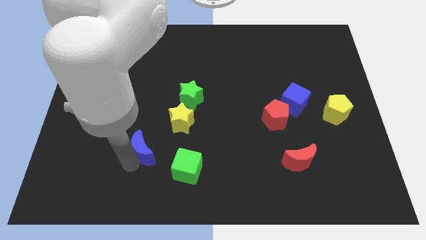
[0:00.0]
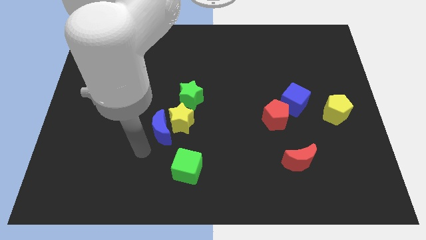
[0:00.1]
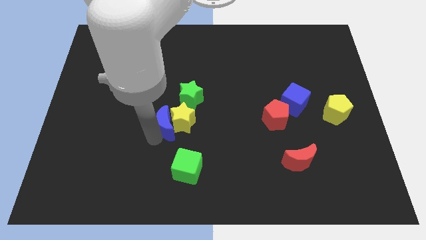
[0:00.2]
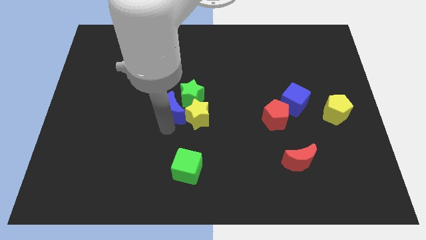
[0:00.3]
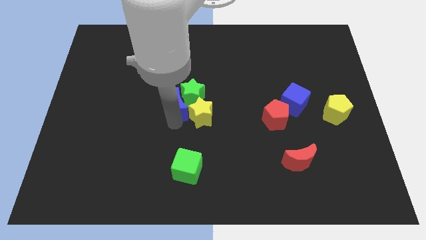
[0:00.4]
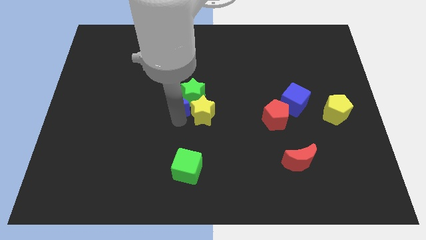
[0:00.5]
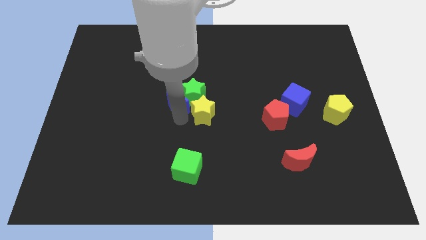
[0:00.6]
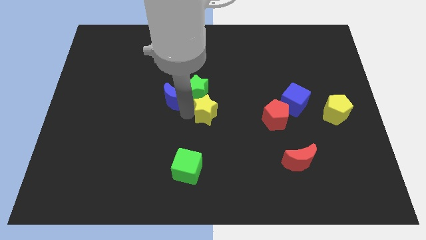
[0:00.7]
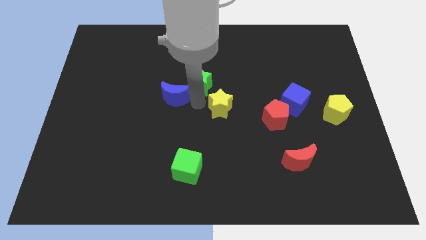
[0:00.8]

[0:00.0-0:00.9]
move the blue crescent to the left of the green star

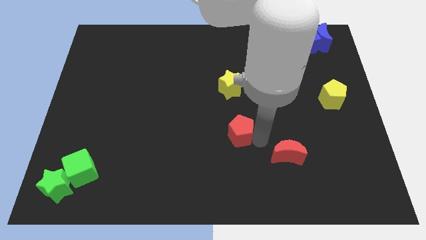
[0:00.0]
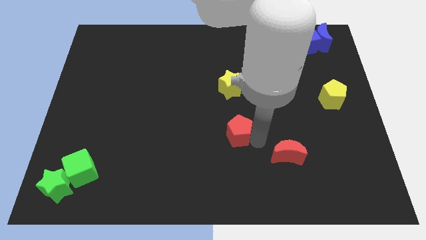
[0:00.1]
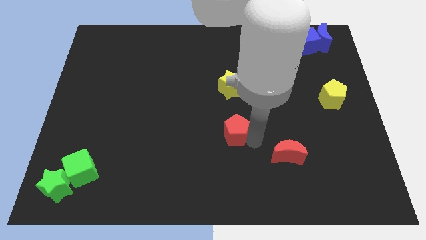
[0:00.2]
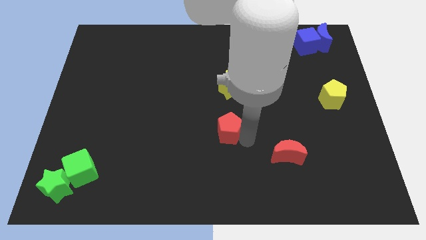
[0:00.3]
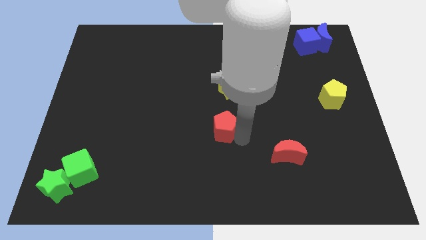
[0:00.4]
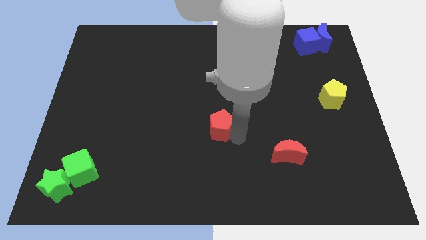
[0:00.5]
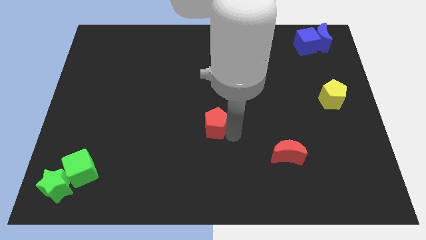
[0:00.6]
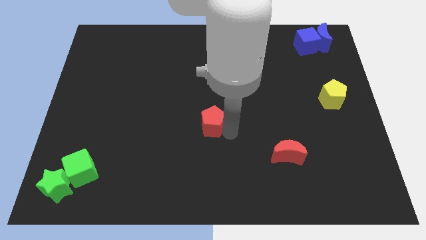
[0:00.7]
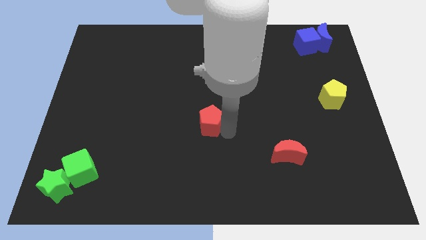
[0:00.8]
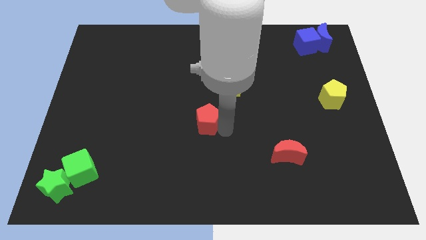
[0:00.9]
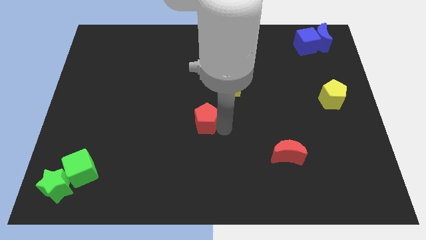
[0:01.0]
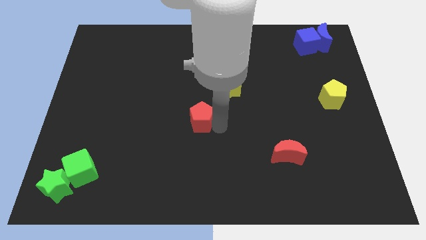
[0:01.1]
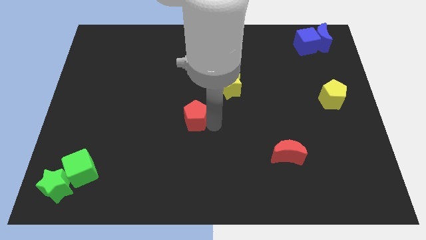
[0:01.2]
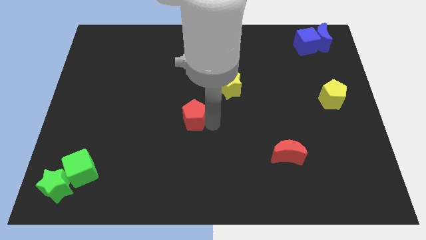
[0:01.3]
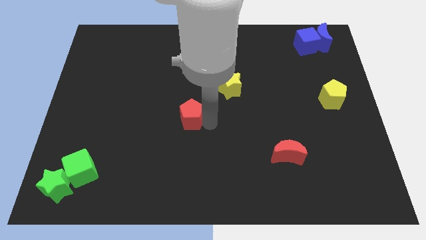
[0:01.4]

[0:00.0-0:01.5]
move the red pentagon slightly to the left side of the board

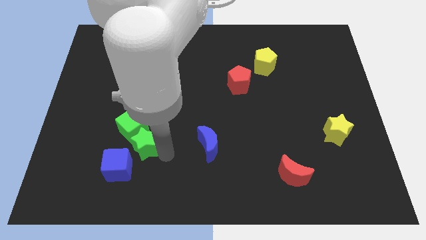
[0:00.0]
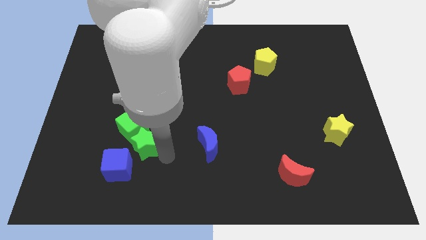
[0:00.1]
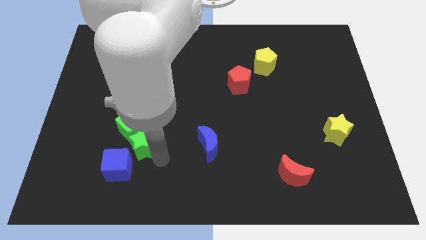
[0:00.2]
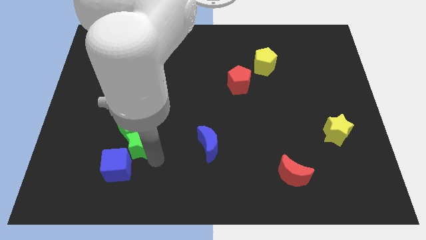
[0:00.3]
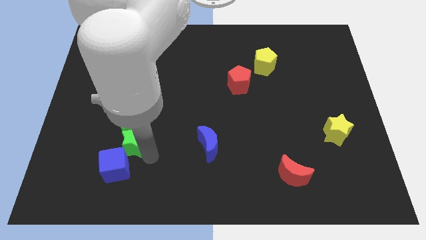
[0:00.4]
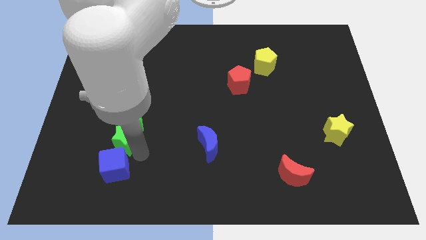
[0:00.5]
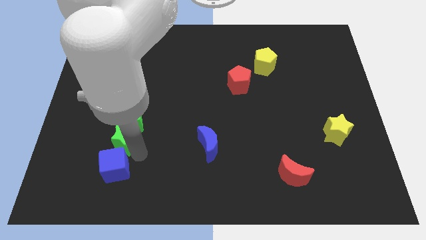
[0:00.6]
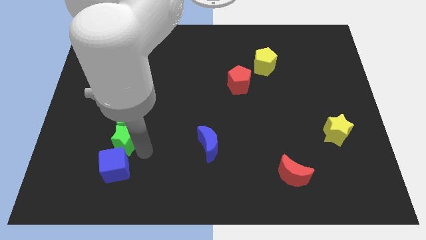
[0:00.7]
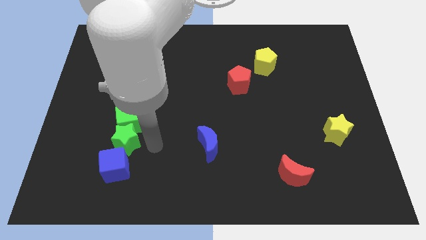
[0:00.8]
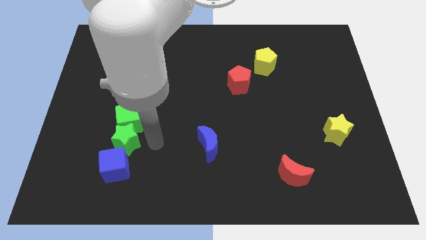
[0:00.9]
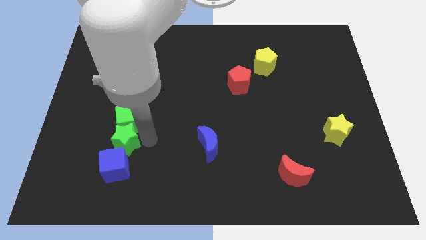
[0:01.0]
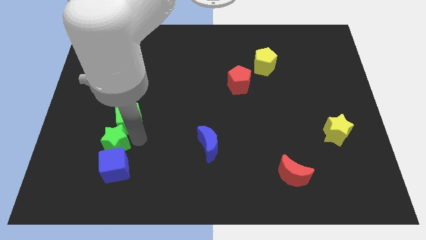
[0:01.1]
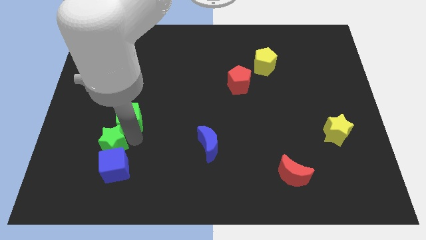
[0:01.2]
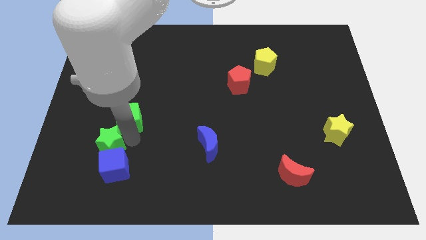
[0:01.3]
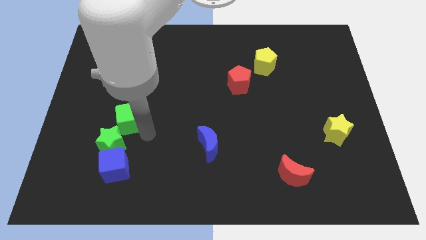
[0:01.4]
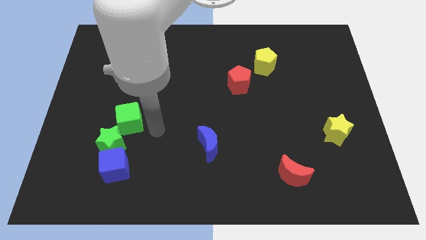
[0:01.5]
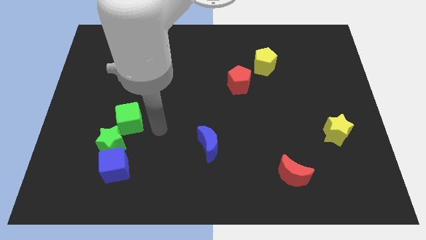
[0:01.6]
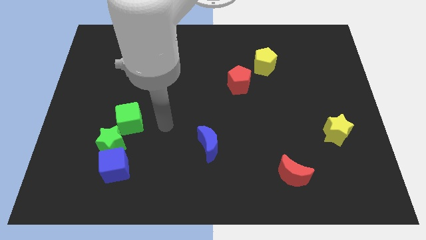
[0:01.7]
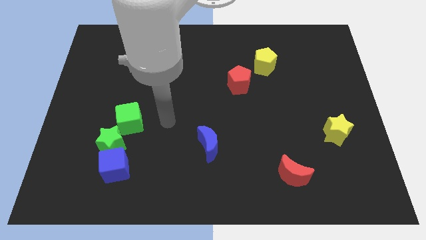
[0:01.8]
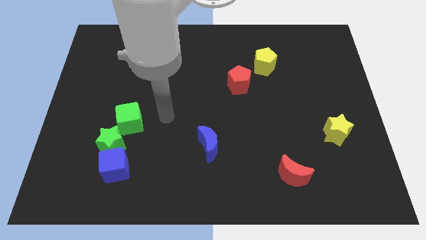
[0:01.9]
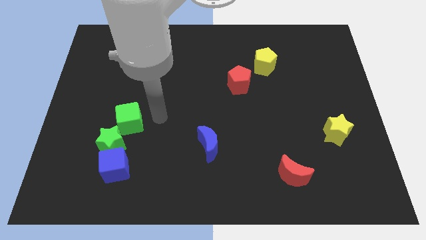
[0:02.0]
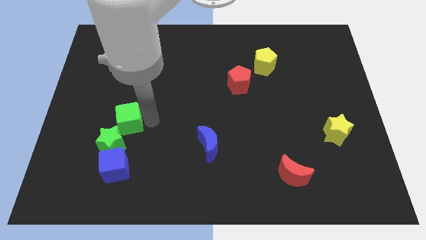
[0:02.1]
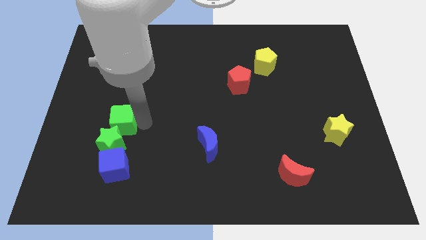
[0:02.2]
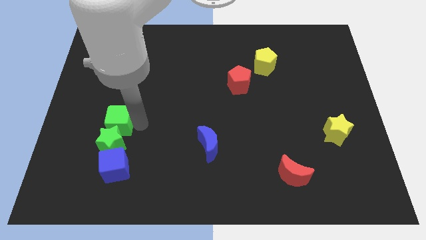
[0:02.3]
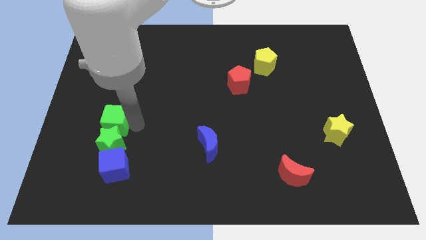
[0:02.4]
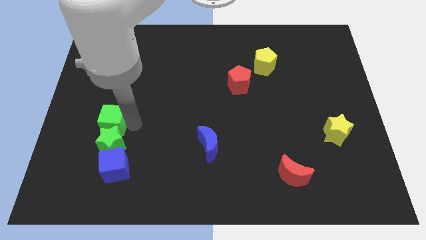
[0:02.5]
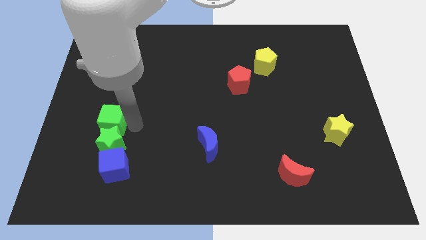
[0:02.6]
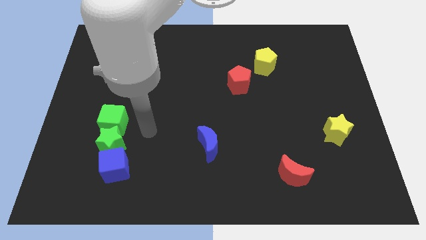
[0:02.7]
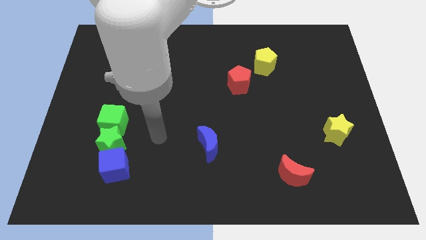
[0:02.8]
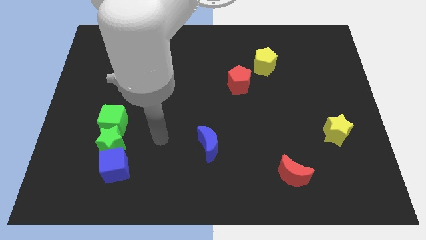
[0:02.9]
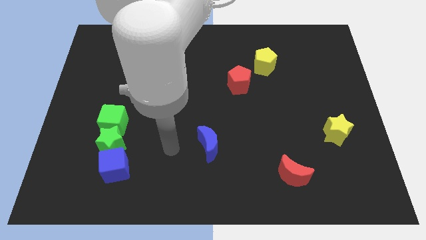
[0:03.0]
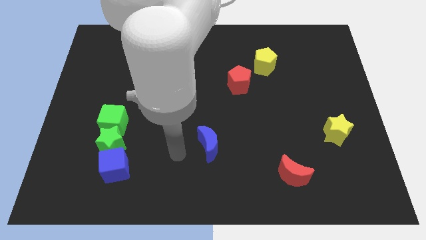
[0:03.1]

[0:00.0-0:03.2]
adjust green blocks to the top of blue cube

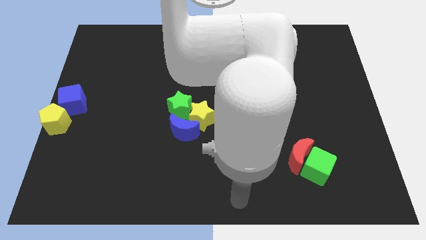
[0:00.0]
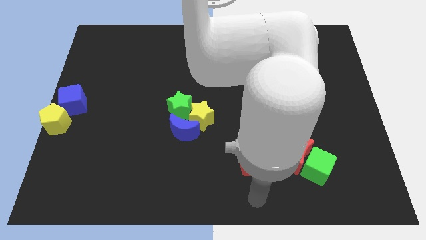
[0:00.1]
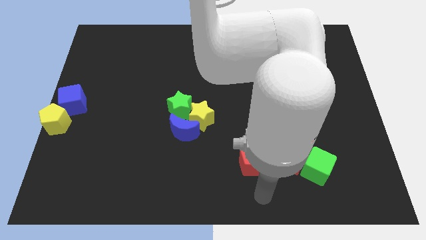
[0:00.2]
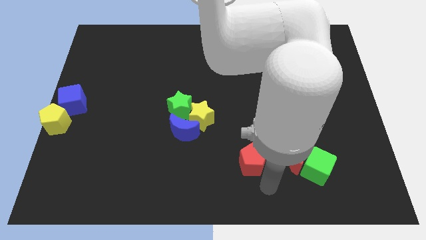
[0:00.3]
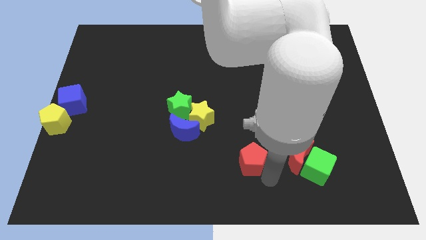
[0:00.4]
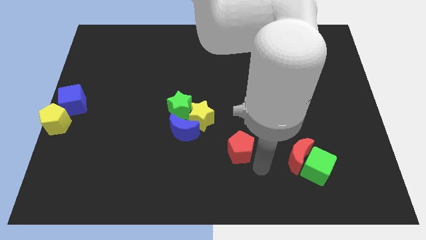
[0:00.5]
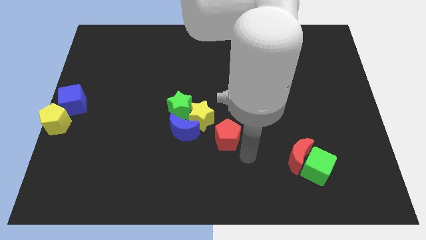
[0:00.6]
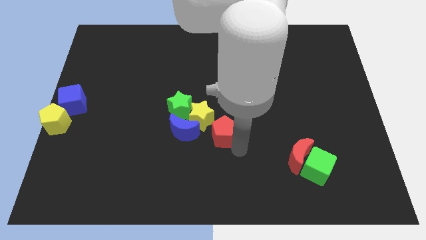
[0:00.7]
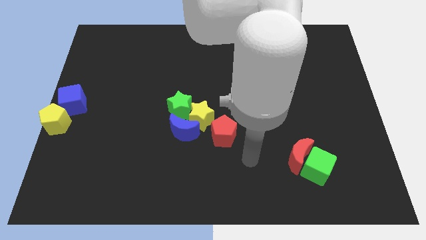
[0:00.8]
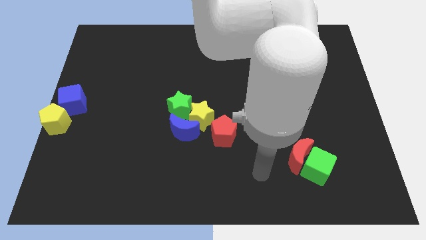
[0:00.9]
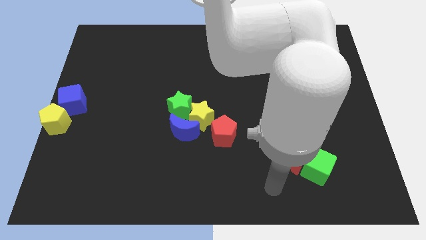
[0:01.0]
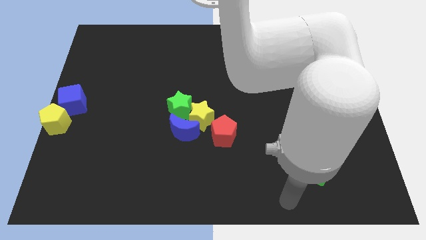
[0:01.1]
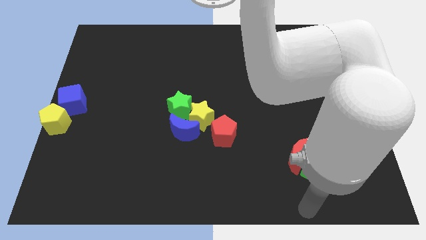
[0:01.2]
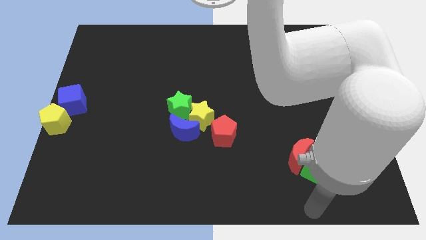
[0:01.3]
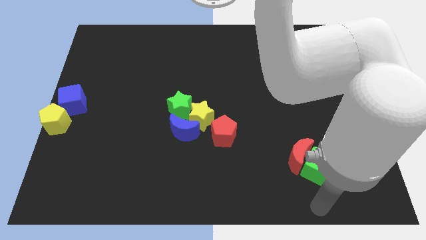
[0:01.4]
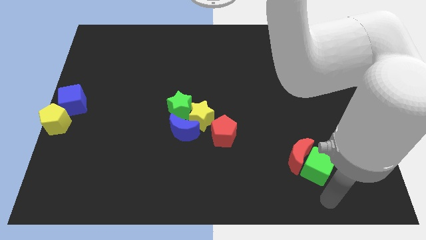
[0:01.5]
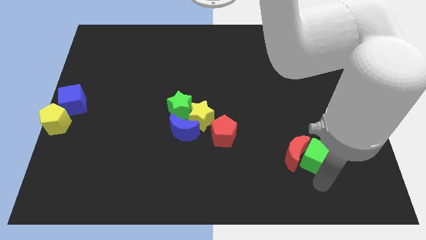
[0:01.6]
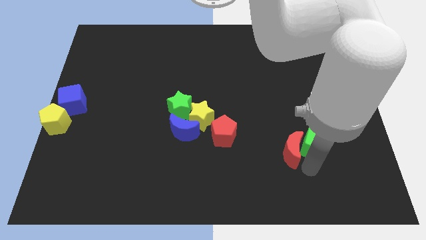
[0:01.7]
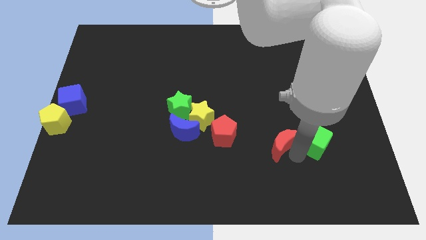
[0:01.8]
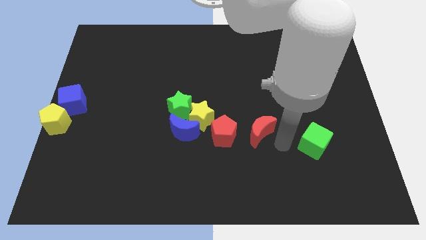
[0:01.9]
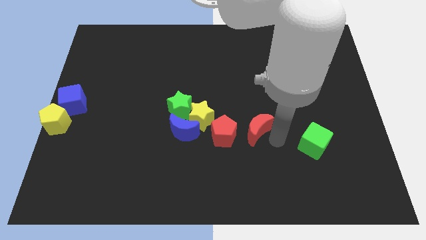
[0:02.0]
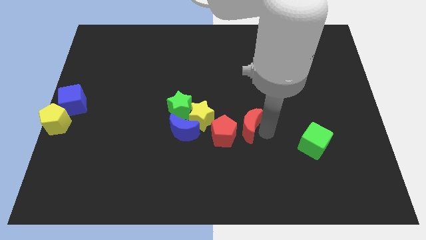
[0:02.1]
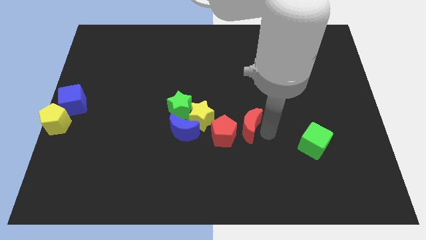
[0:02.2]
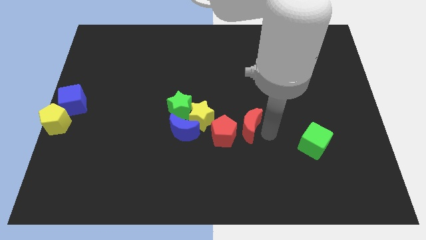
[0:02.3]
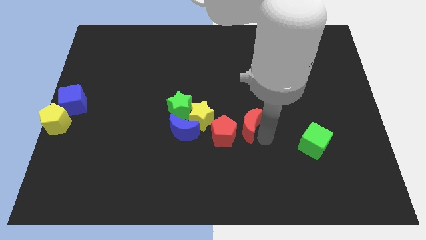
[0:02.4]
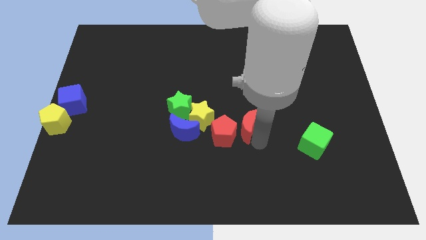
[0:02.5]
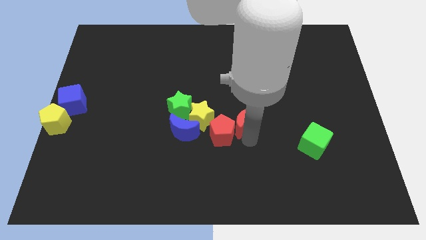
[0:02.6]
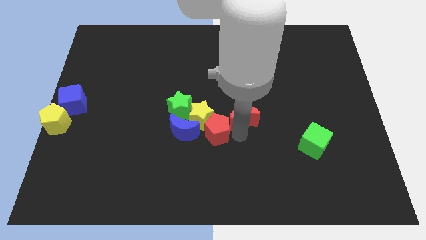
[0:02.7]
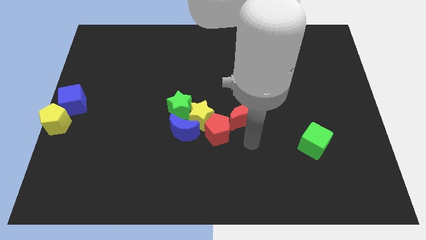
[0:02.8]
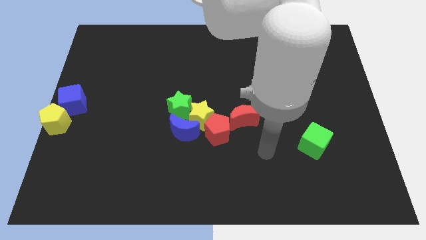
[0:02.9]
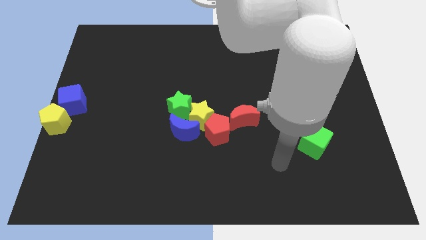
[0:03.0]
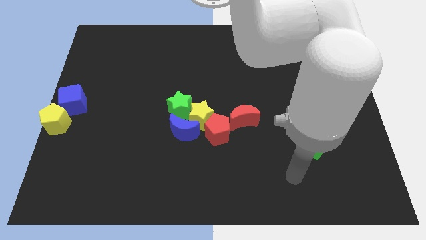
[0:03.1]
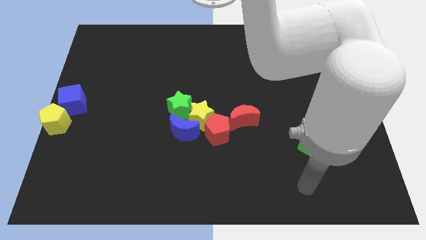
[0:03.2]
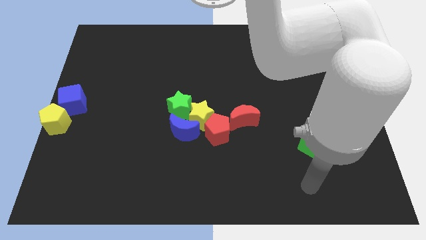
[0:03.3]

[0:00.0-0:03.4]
push the red pentagon and crescent close to yellow star
